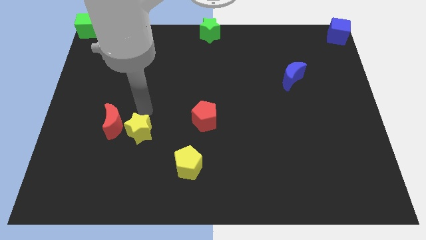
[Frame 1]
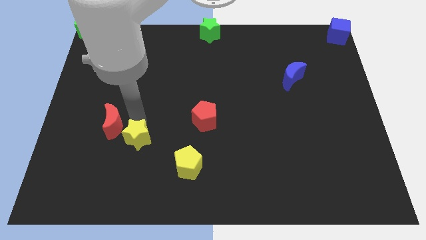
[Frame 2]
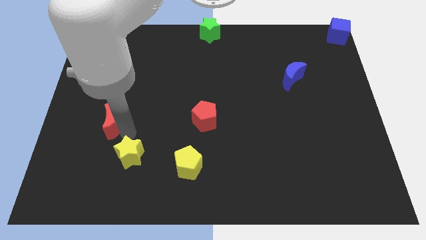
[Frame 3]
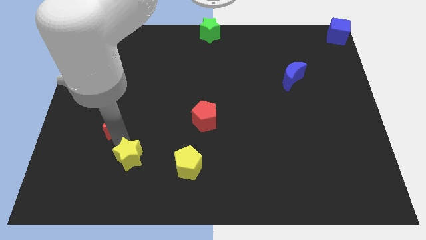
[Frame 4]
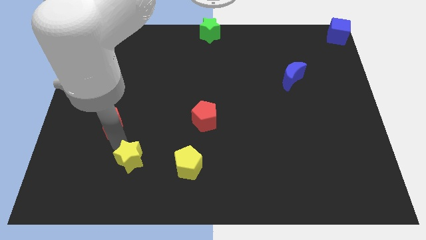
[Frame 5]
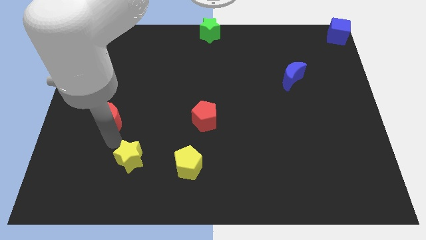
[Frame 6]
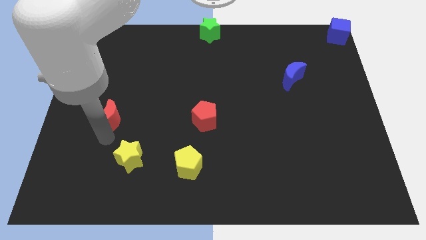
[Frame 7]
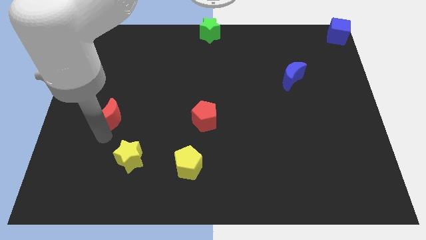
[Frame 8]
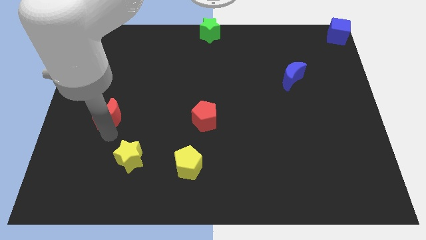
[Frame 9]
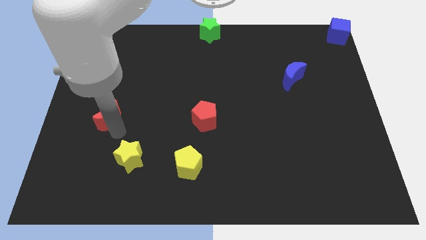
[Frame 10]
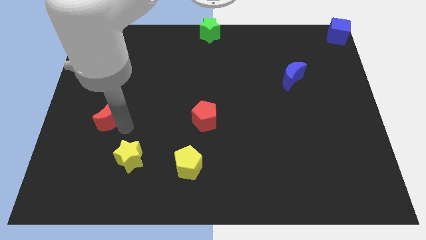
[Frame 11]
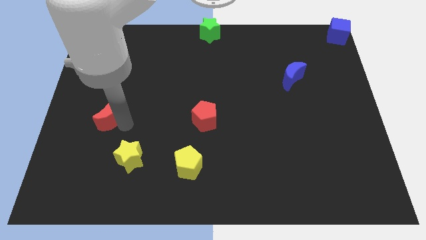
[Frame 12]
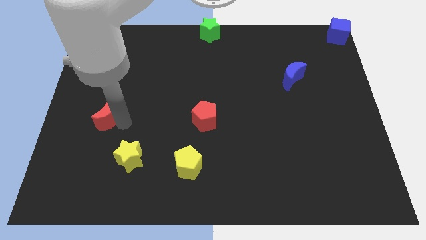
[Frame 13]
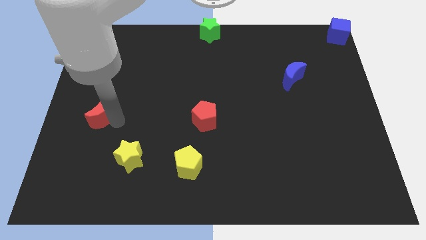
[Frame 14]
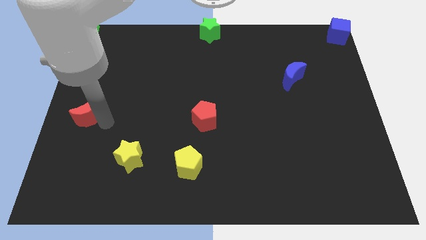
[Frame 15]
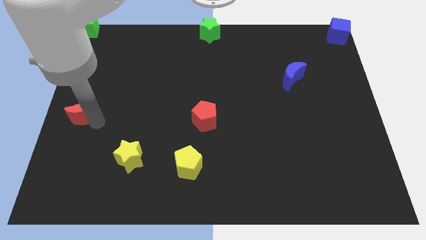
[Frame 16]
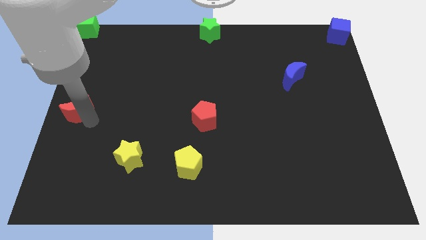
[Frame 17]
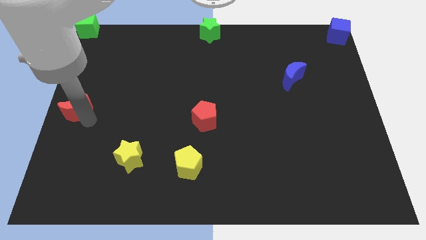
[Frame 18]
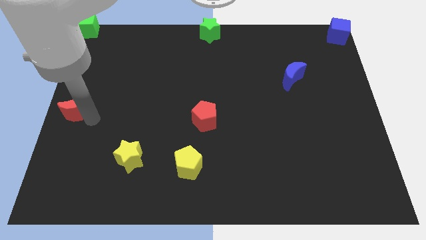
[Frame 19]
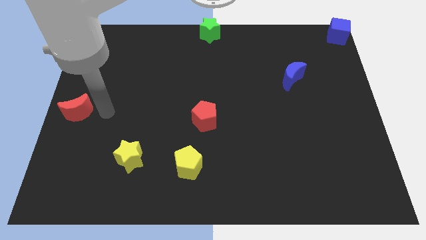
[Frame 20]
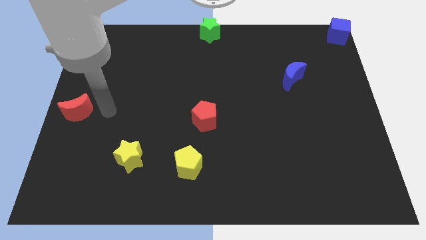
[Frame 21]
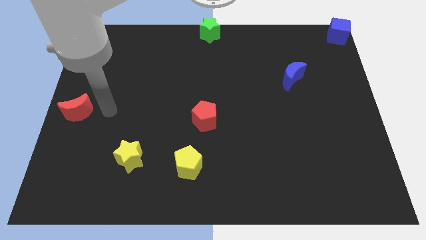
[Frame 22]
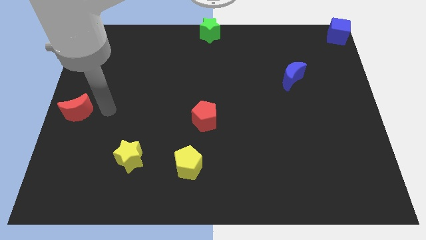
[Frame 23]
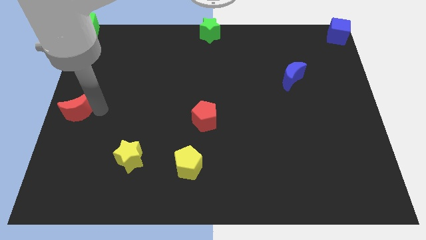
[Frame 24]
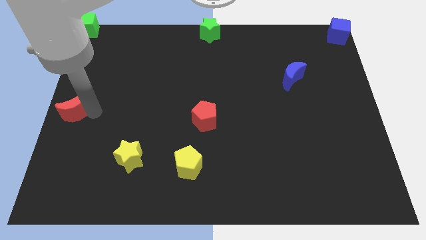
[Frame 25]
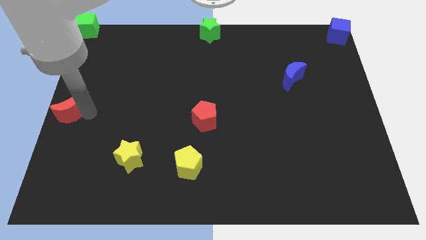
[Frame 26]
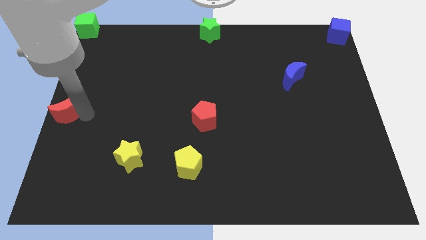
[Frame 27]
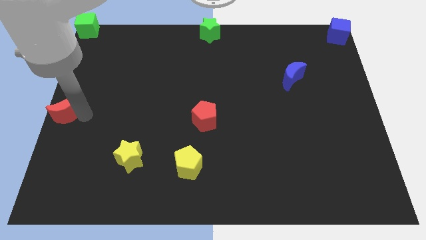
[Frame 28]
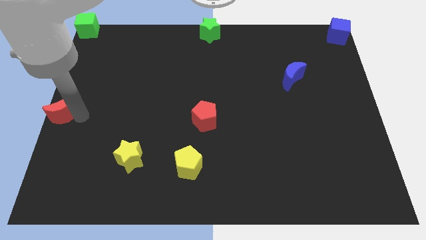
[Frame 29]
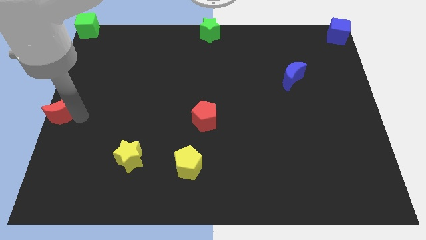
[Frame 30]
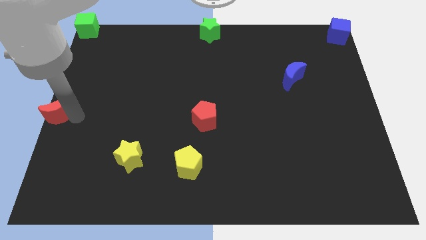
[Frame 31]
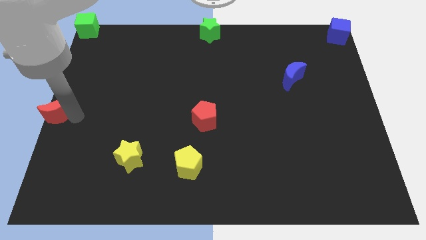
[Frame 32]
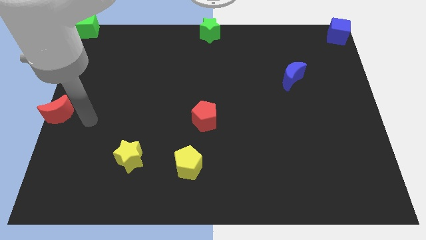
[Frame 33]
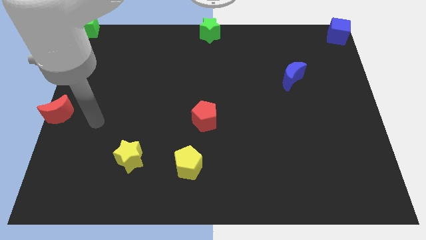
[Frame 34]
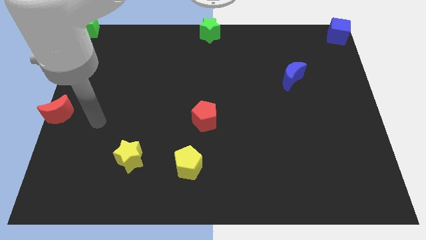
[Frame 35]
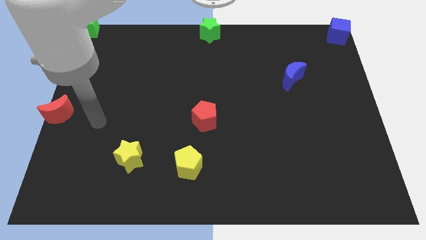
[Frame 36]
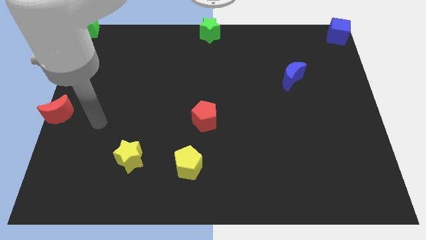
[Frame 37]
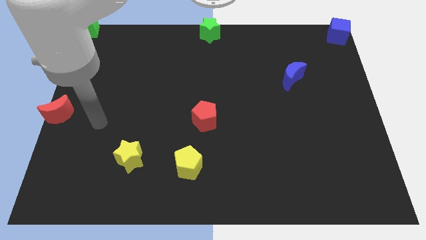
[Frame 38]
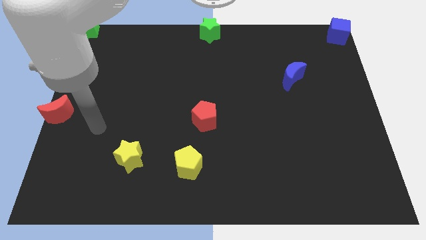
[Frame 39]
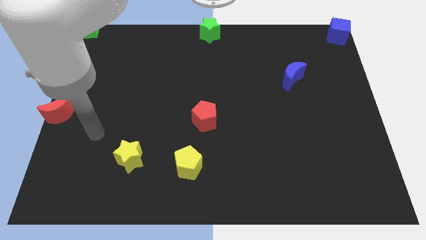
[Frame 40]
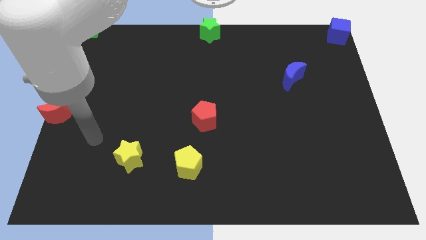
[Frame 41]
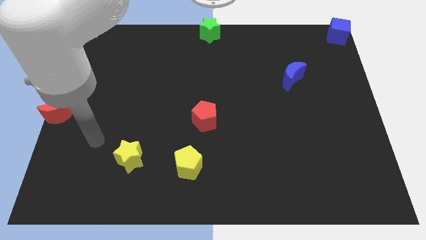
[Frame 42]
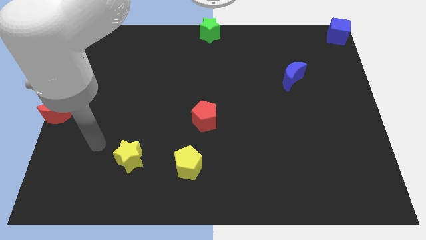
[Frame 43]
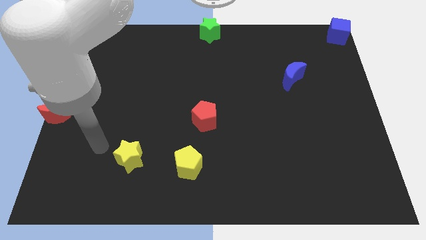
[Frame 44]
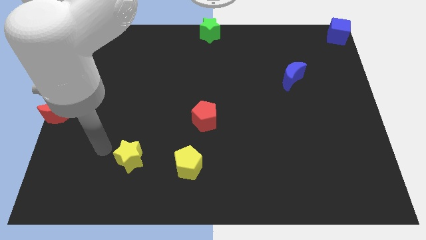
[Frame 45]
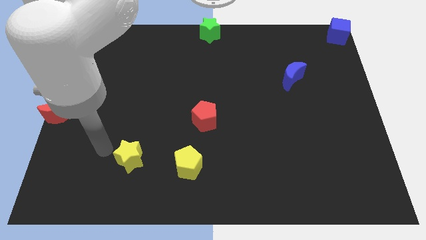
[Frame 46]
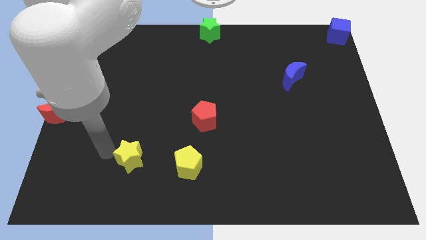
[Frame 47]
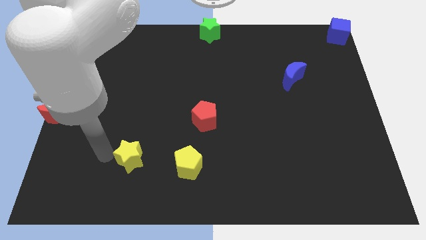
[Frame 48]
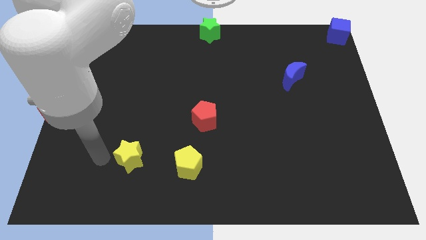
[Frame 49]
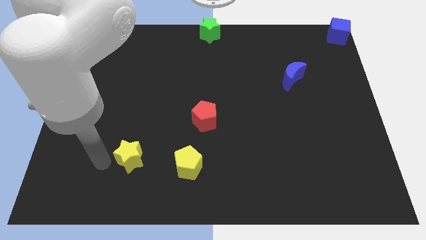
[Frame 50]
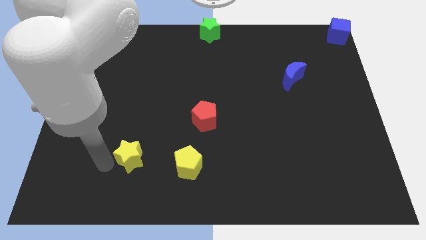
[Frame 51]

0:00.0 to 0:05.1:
push red moon to the left center

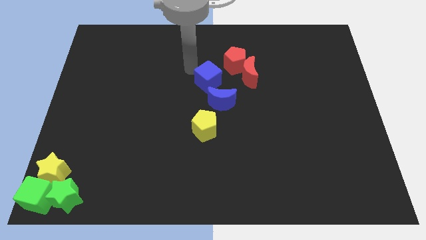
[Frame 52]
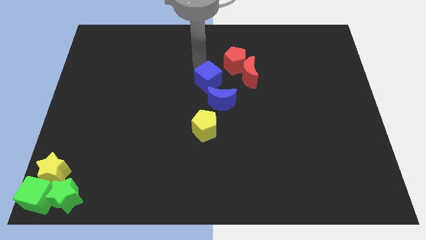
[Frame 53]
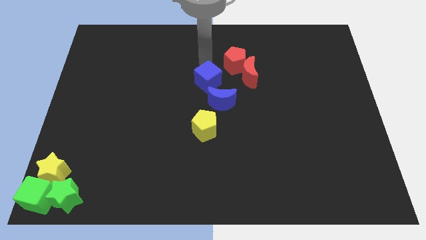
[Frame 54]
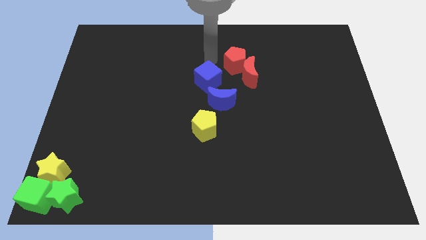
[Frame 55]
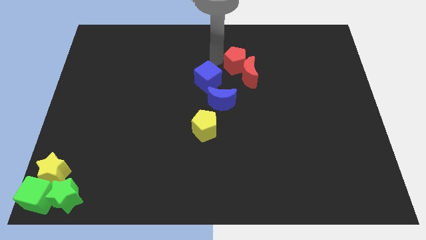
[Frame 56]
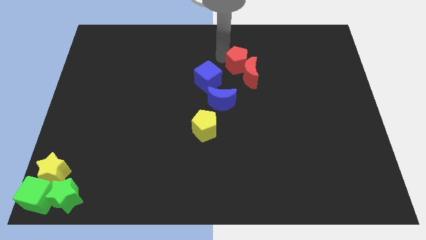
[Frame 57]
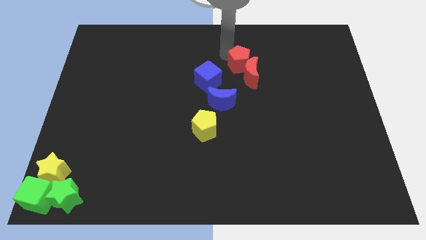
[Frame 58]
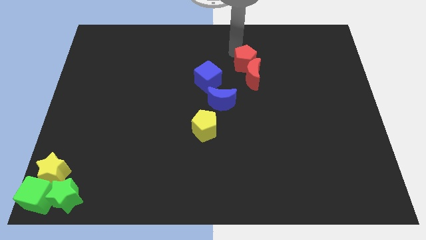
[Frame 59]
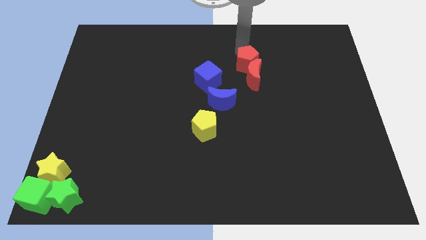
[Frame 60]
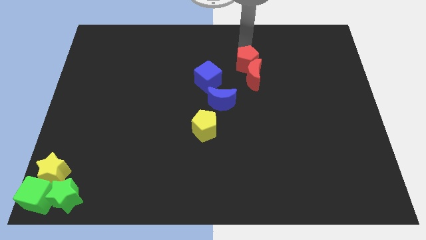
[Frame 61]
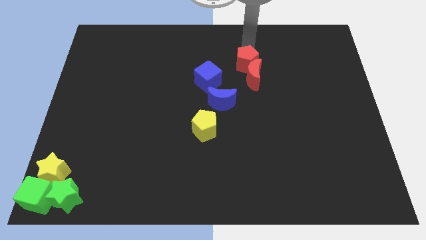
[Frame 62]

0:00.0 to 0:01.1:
tap on the top edge of red pentagon
